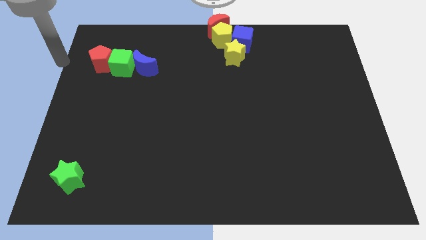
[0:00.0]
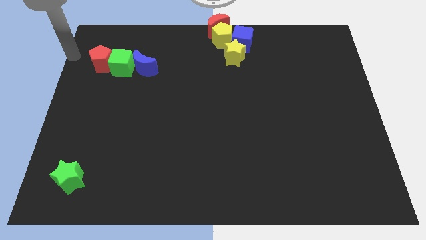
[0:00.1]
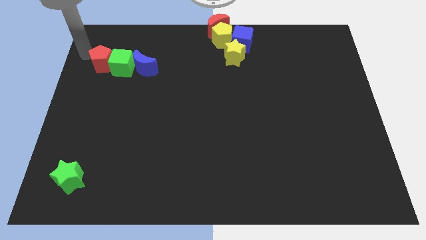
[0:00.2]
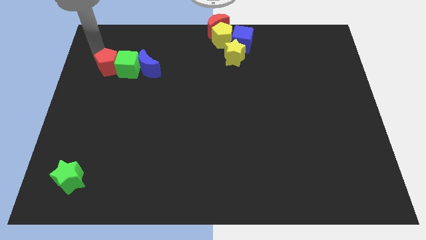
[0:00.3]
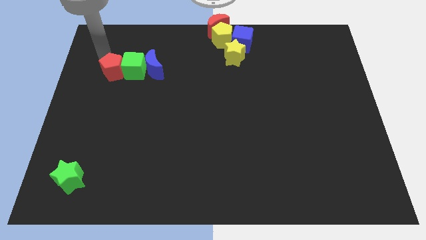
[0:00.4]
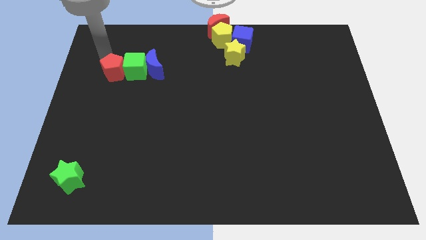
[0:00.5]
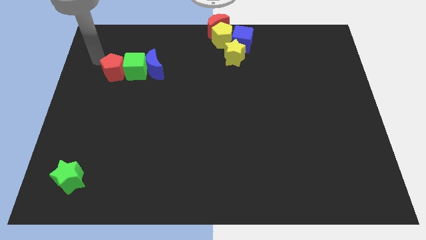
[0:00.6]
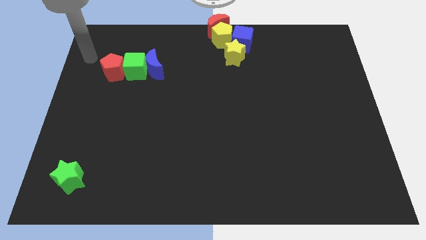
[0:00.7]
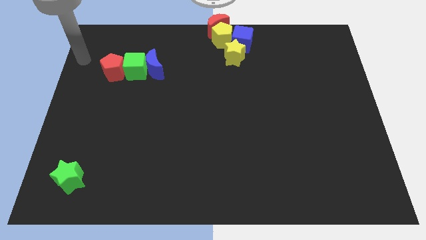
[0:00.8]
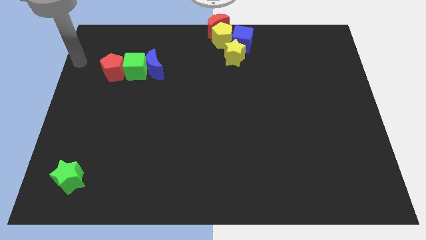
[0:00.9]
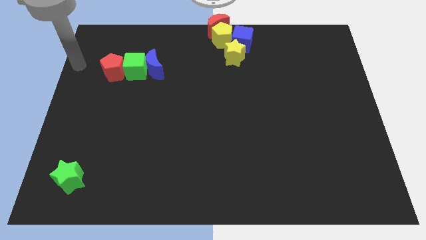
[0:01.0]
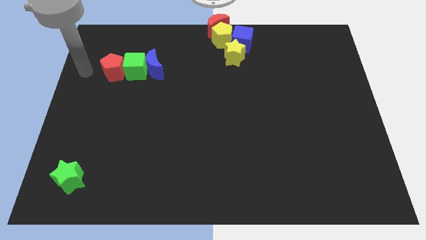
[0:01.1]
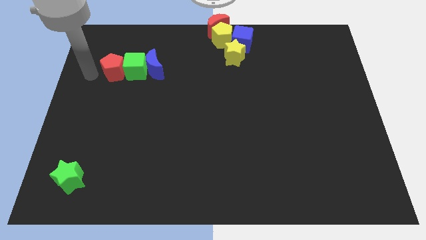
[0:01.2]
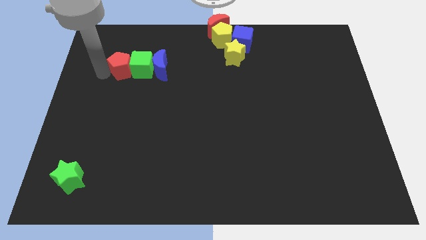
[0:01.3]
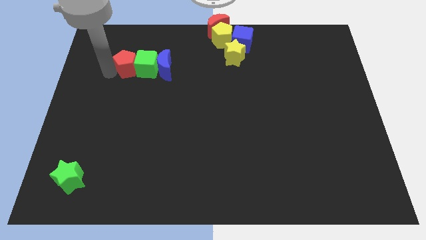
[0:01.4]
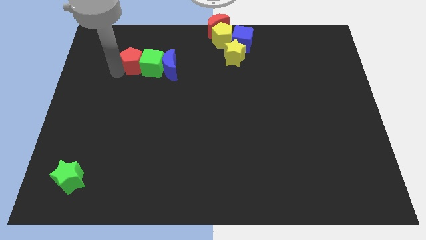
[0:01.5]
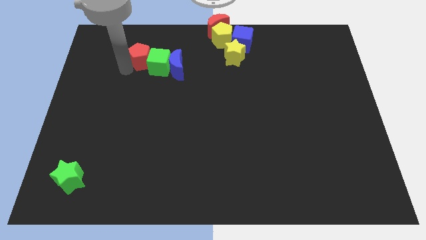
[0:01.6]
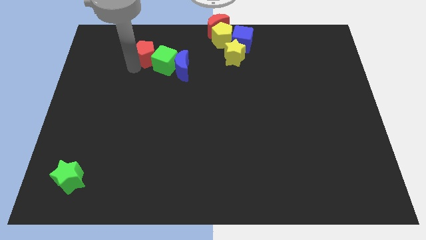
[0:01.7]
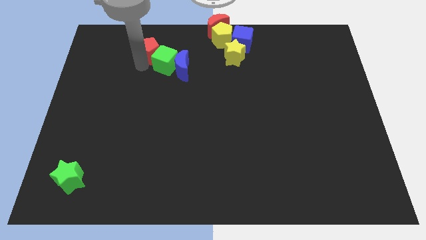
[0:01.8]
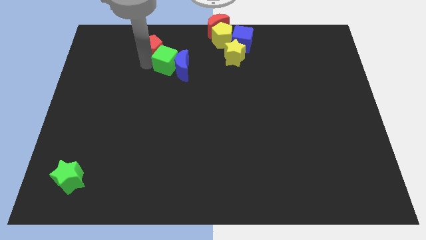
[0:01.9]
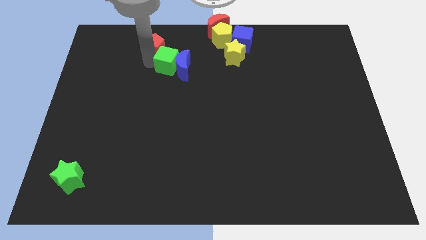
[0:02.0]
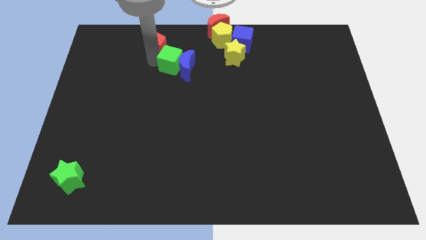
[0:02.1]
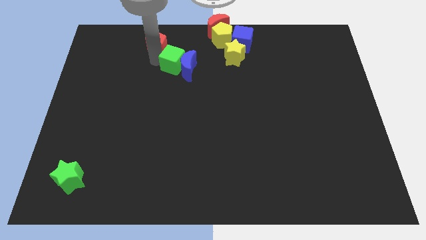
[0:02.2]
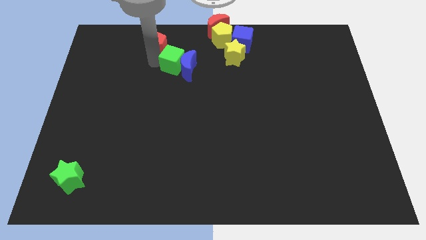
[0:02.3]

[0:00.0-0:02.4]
move red pentagon green cubeblue moon slightly right

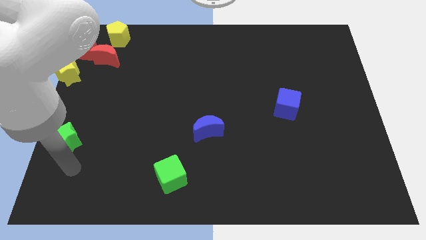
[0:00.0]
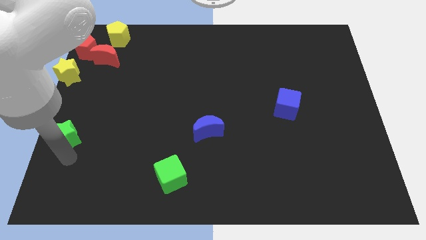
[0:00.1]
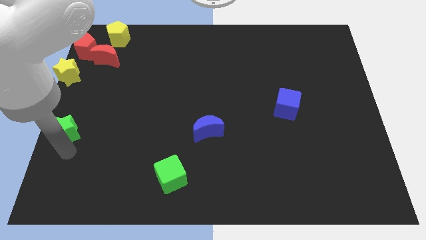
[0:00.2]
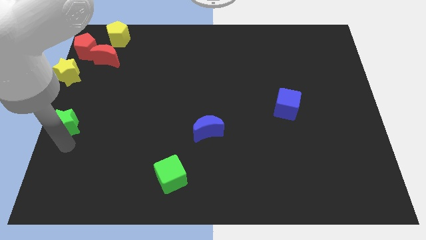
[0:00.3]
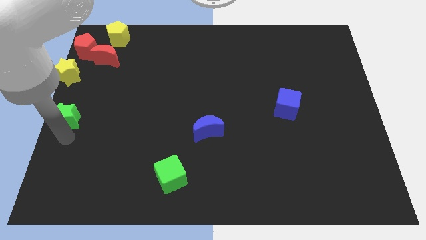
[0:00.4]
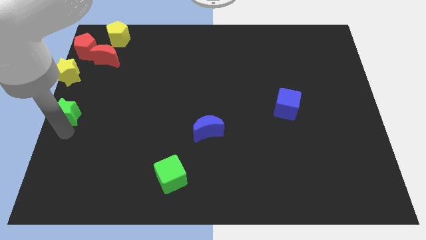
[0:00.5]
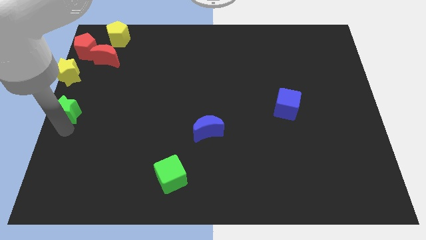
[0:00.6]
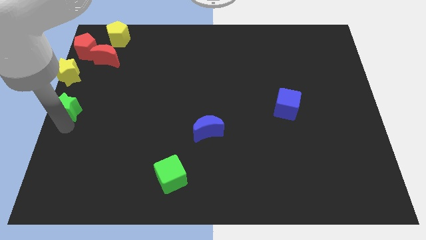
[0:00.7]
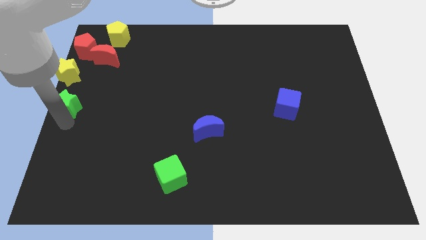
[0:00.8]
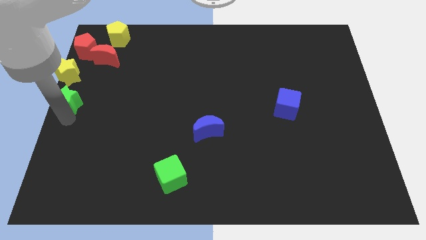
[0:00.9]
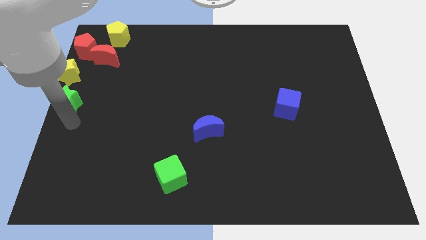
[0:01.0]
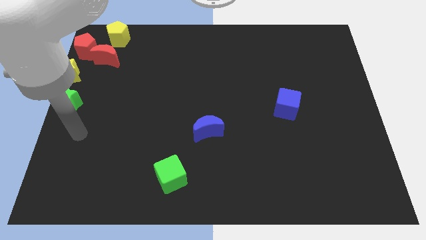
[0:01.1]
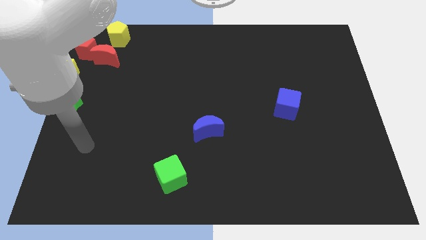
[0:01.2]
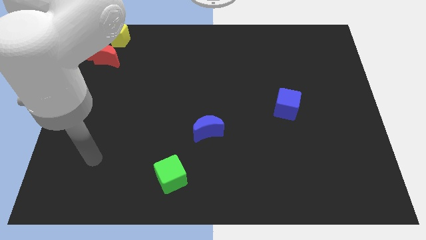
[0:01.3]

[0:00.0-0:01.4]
place the green star below the yellow star

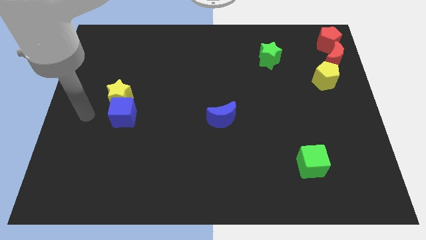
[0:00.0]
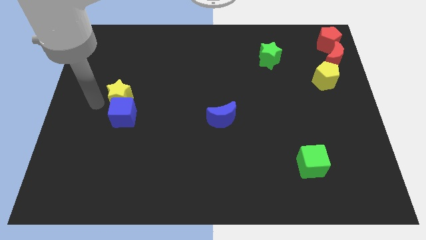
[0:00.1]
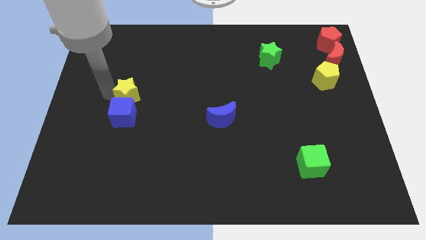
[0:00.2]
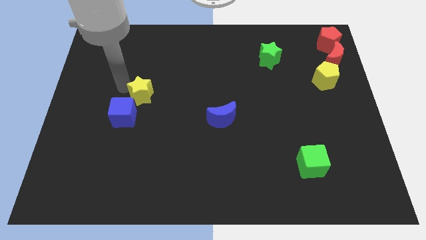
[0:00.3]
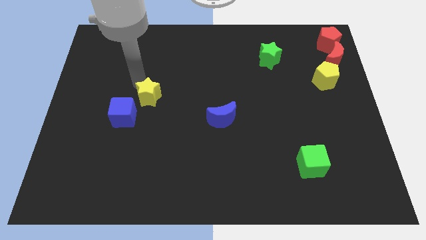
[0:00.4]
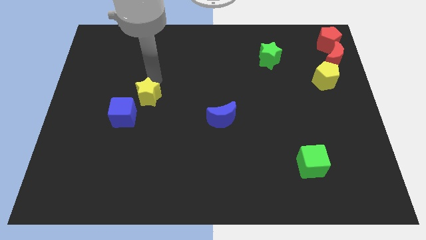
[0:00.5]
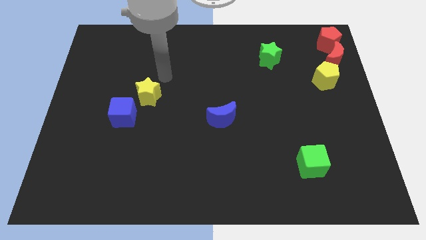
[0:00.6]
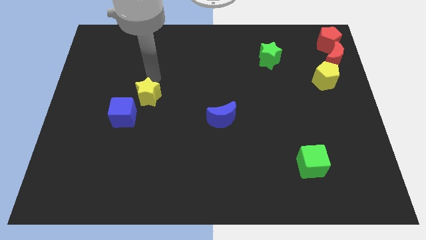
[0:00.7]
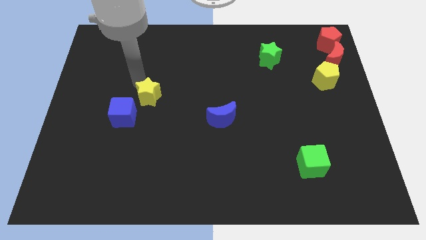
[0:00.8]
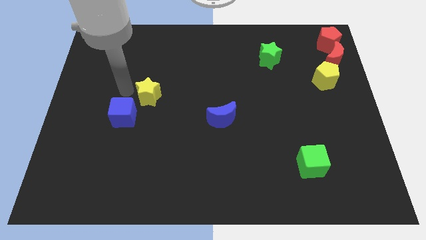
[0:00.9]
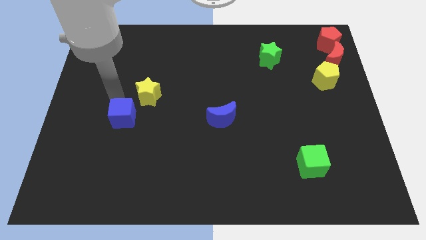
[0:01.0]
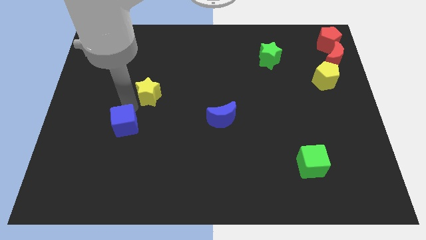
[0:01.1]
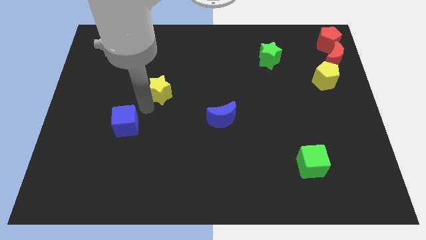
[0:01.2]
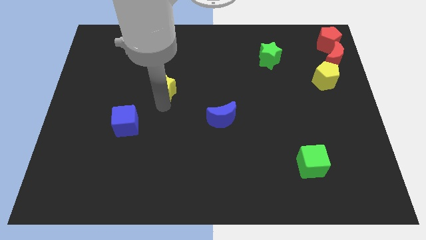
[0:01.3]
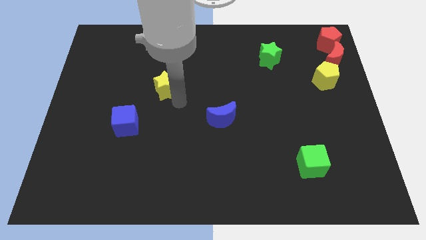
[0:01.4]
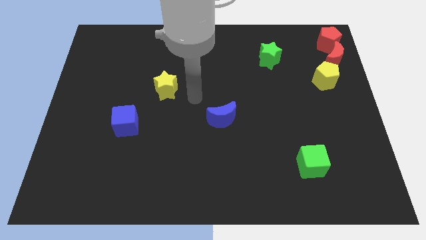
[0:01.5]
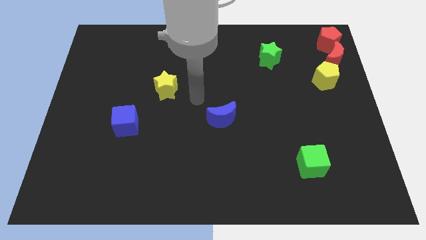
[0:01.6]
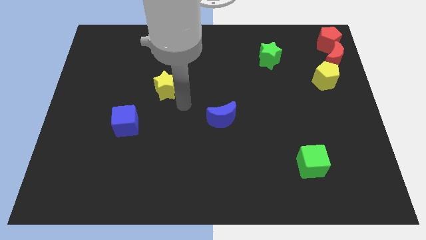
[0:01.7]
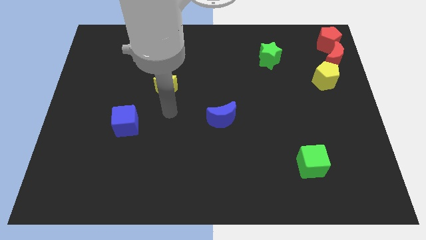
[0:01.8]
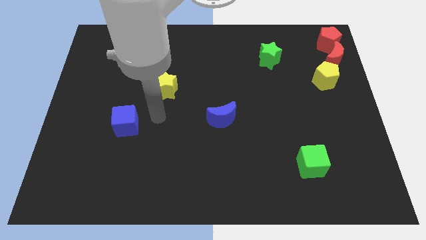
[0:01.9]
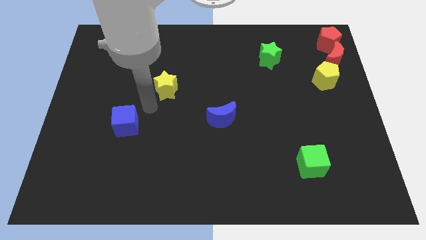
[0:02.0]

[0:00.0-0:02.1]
separate yellow star from the blue cube

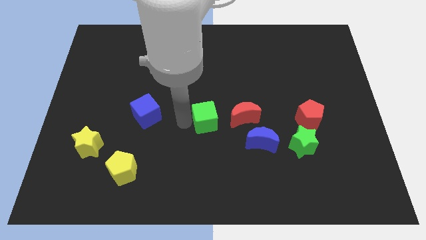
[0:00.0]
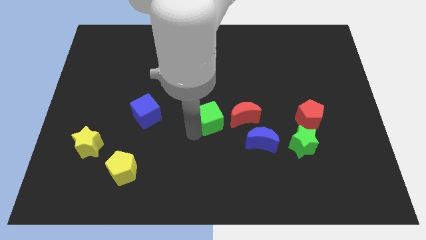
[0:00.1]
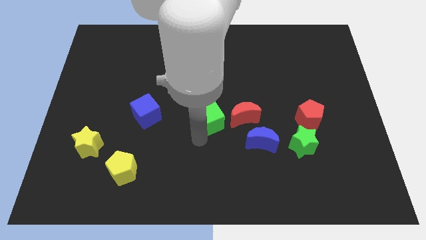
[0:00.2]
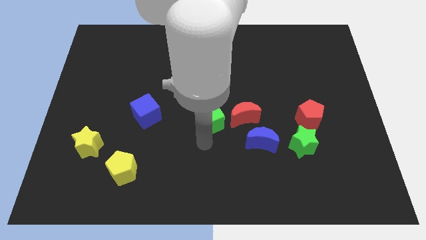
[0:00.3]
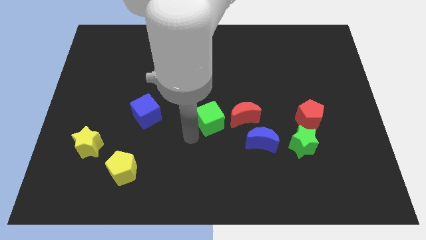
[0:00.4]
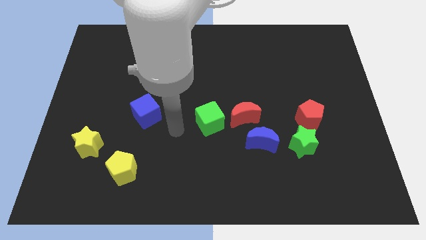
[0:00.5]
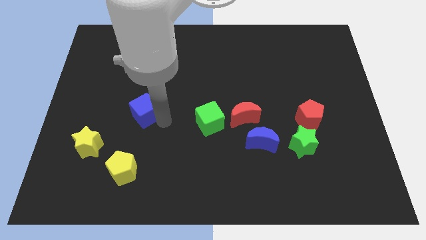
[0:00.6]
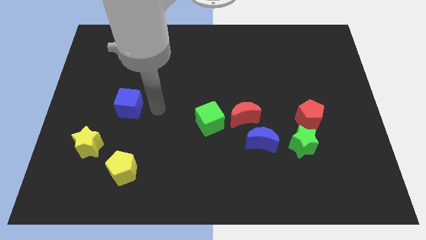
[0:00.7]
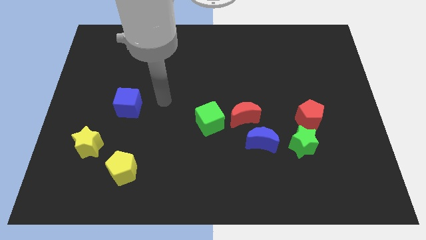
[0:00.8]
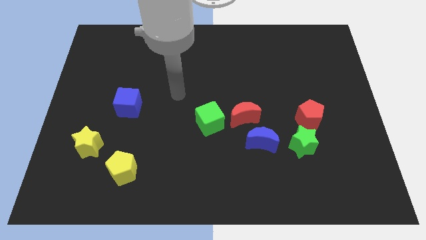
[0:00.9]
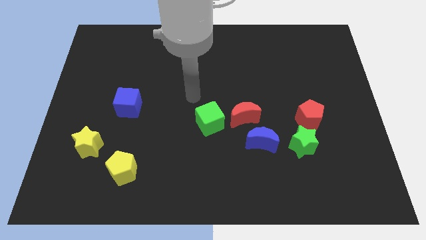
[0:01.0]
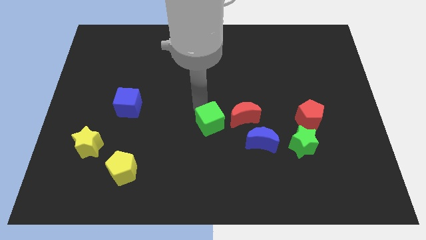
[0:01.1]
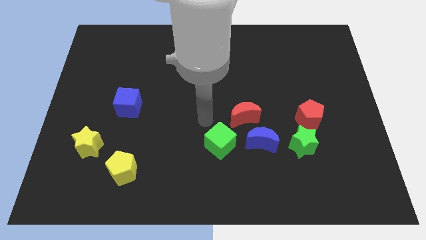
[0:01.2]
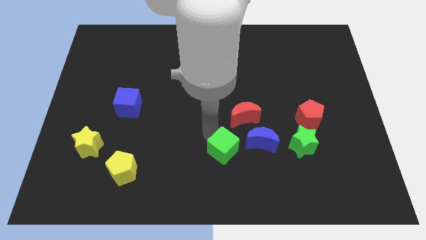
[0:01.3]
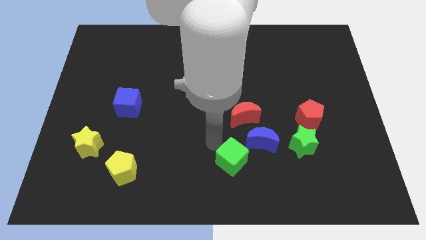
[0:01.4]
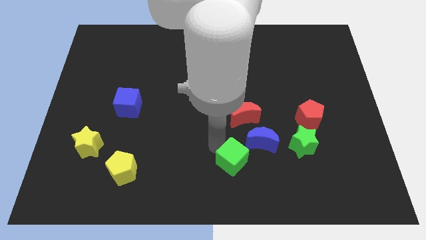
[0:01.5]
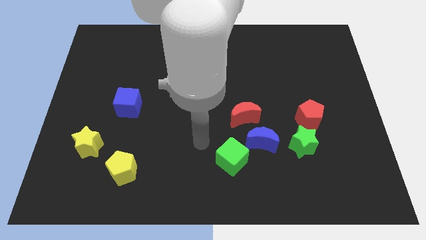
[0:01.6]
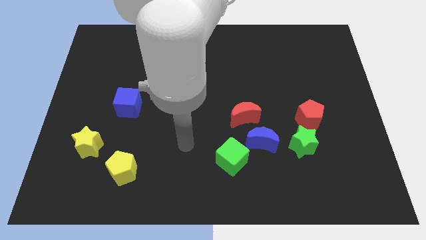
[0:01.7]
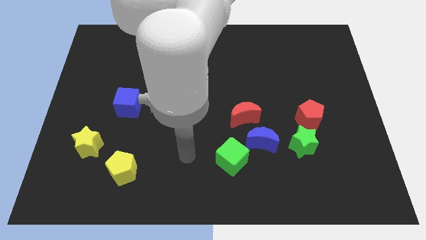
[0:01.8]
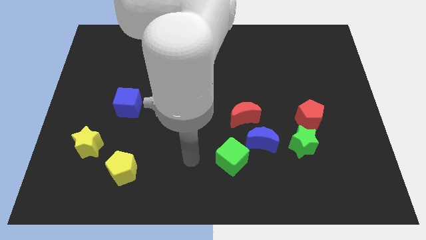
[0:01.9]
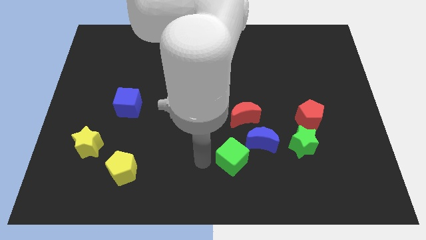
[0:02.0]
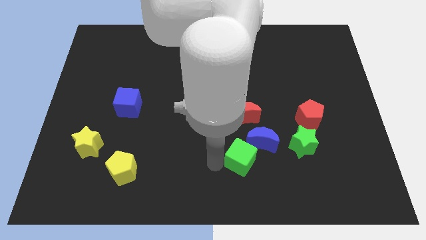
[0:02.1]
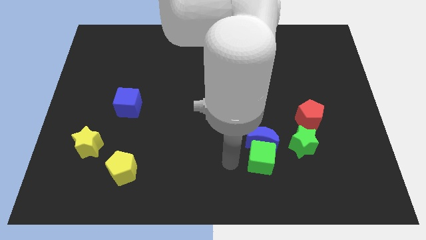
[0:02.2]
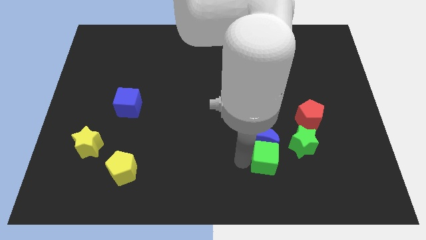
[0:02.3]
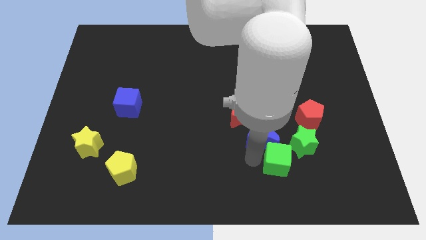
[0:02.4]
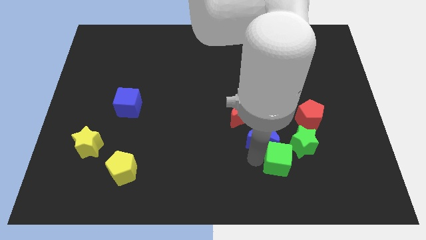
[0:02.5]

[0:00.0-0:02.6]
place the green cube to the bottom of the blue crescent

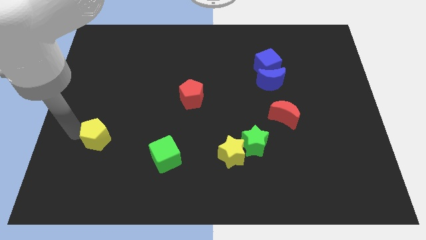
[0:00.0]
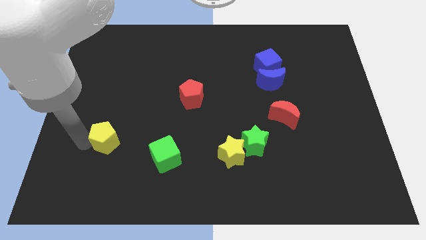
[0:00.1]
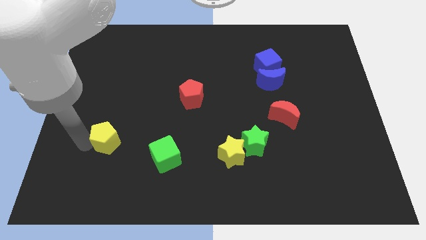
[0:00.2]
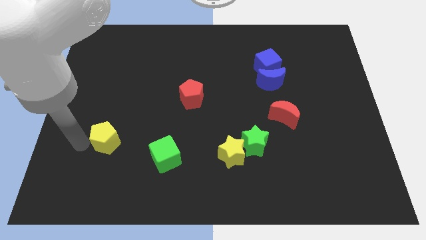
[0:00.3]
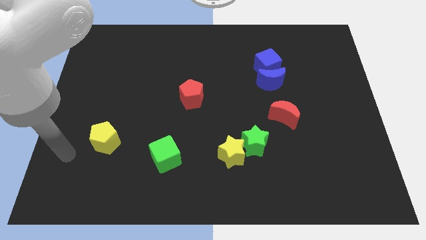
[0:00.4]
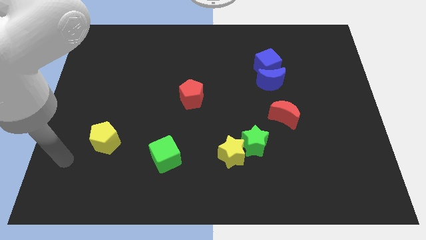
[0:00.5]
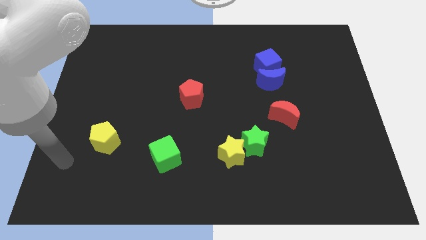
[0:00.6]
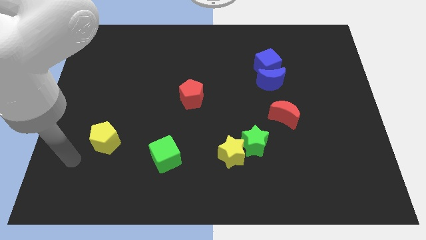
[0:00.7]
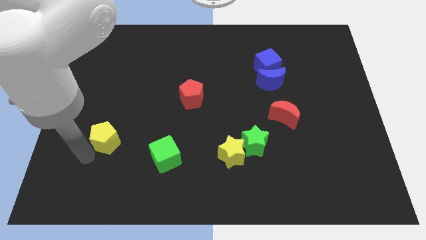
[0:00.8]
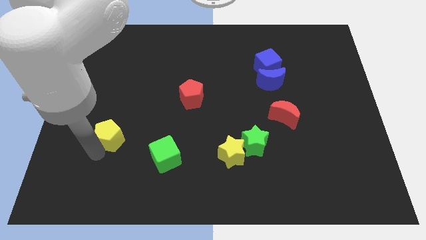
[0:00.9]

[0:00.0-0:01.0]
push yellow pentagon towards green star
